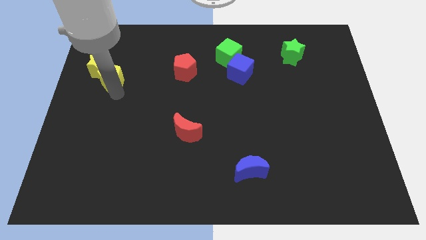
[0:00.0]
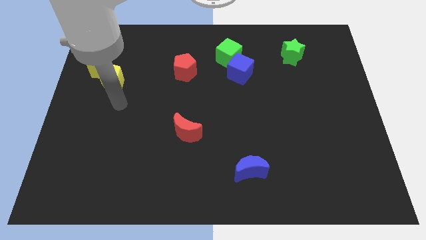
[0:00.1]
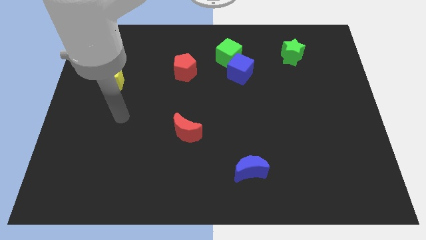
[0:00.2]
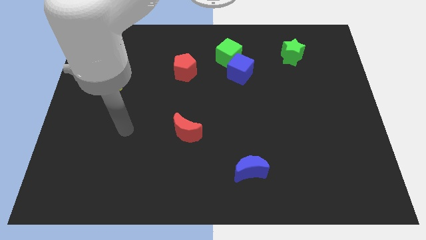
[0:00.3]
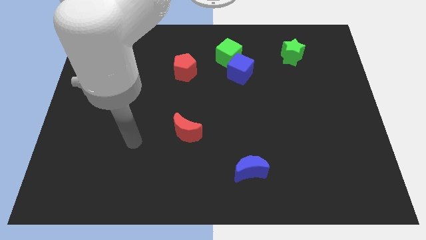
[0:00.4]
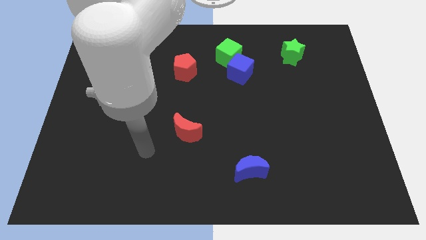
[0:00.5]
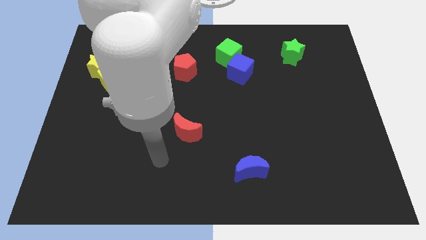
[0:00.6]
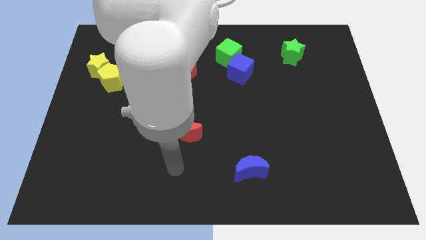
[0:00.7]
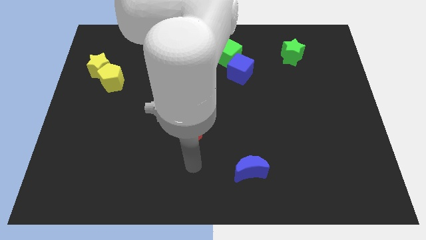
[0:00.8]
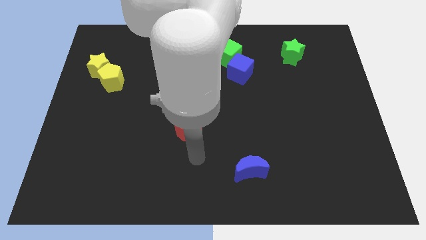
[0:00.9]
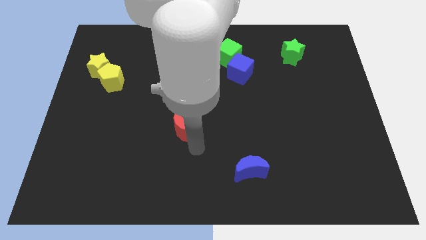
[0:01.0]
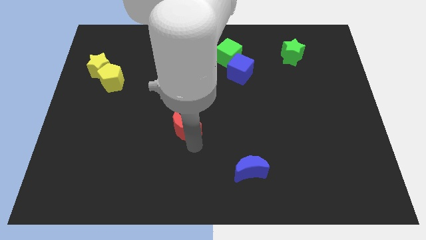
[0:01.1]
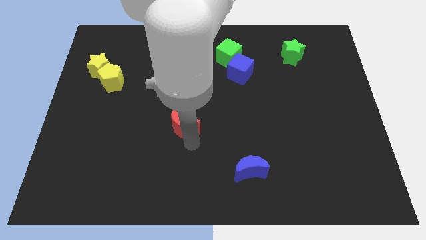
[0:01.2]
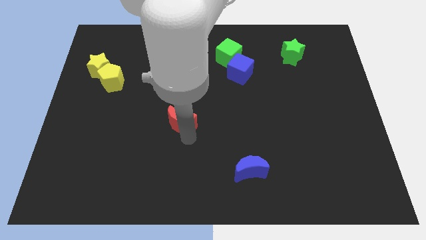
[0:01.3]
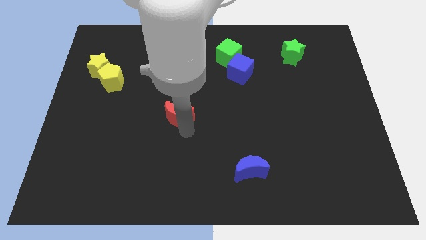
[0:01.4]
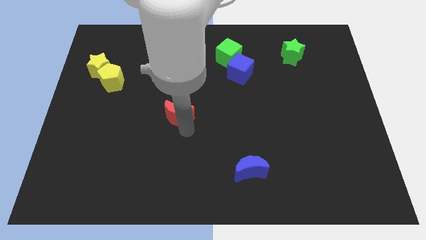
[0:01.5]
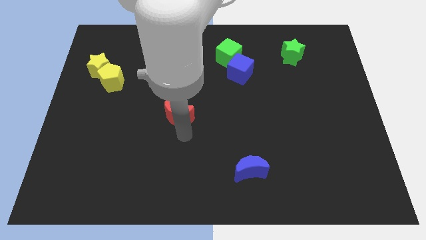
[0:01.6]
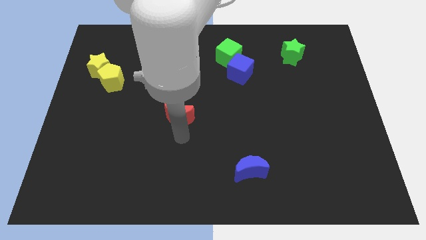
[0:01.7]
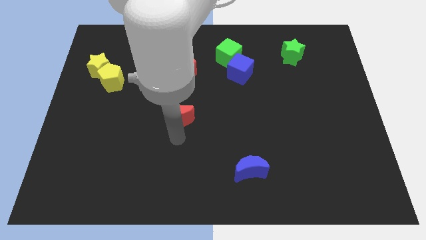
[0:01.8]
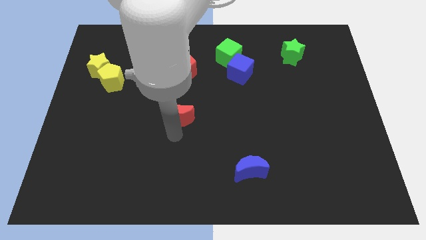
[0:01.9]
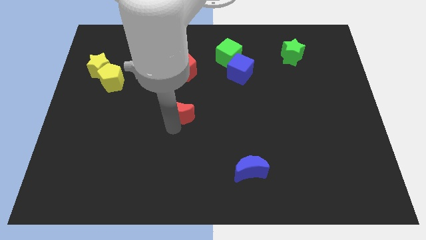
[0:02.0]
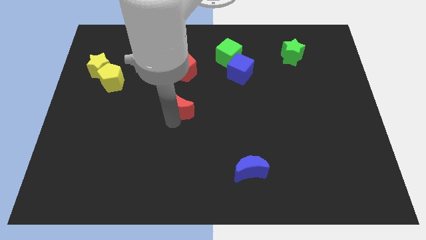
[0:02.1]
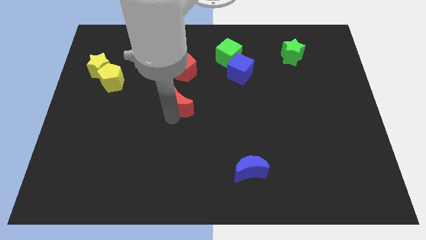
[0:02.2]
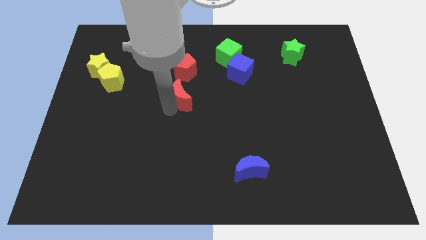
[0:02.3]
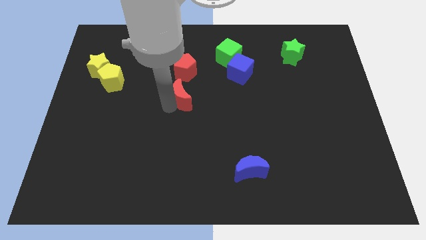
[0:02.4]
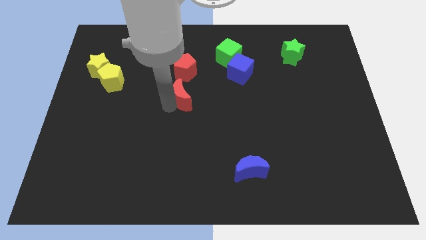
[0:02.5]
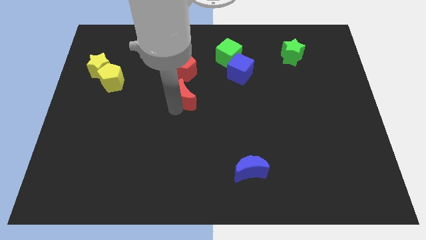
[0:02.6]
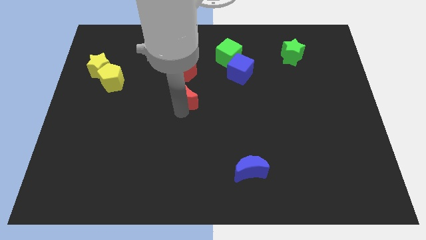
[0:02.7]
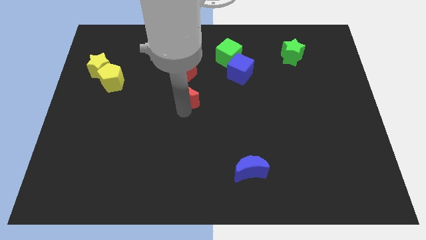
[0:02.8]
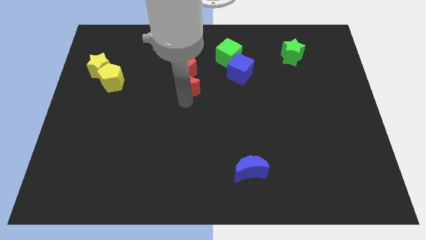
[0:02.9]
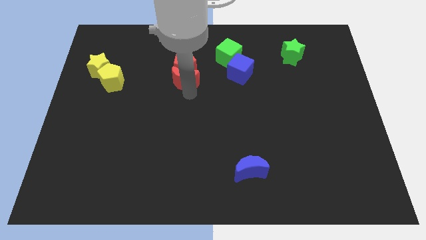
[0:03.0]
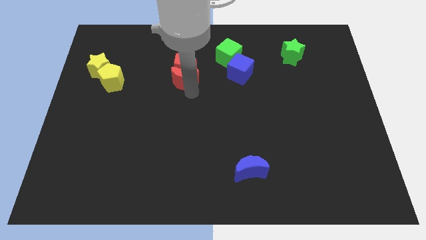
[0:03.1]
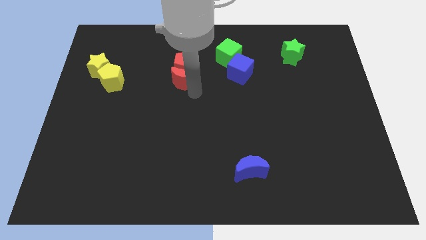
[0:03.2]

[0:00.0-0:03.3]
slide the red moon into the bottom side of the red pentagon

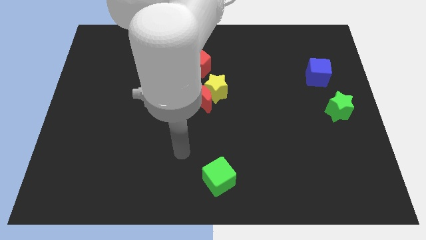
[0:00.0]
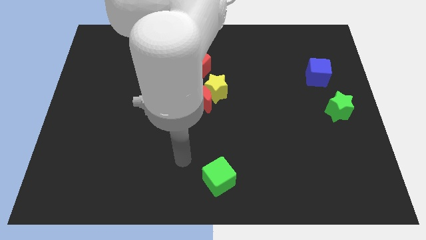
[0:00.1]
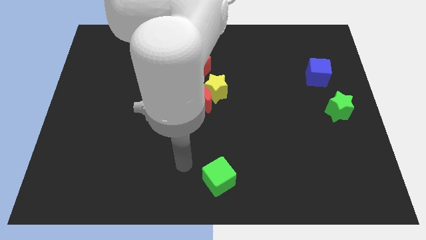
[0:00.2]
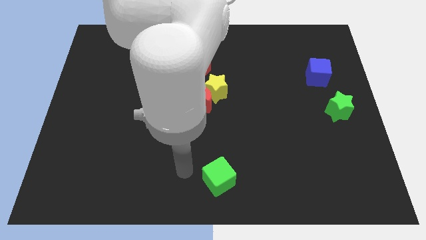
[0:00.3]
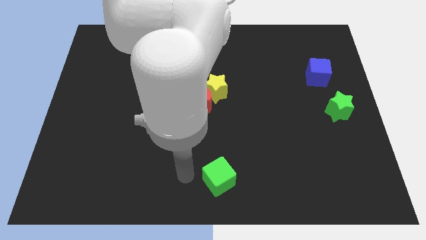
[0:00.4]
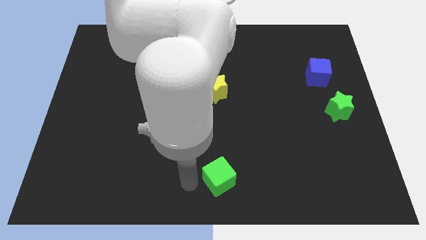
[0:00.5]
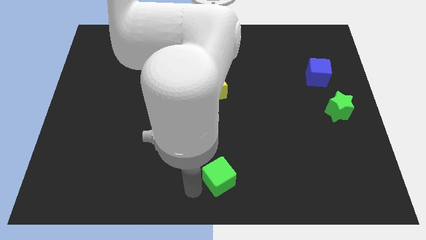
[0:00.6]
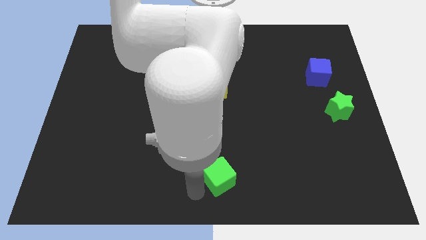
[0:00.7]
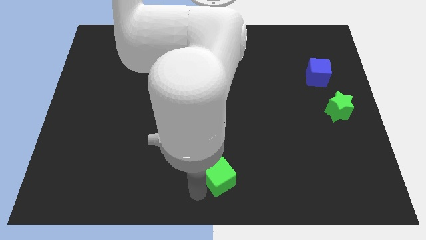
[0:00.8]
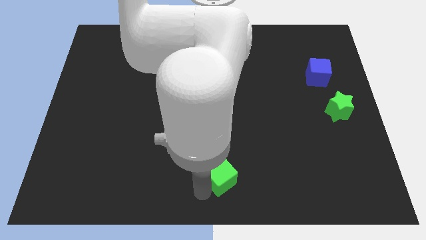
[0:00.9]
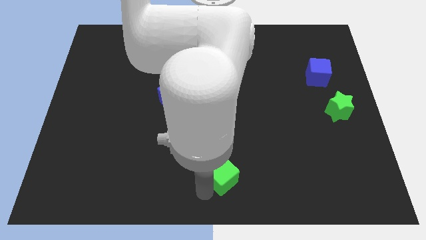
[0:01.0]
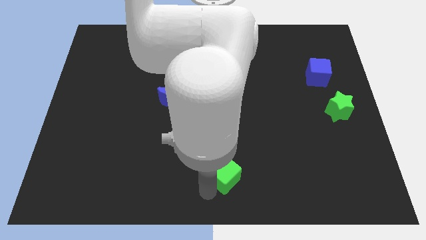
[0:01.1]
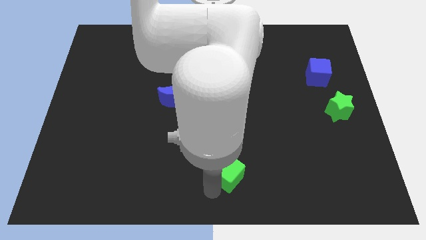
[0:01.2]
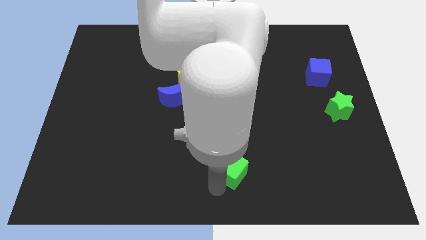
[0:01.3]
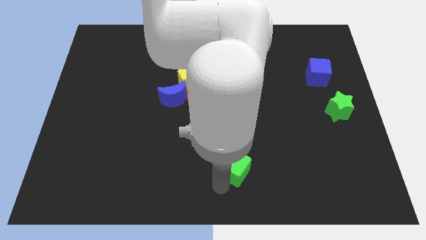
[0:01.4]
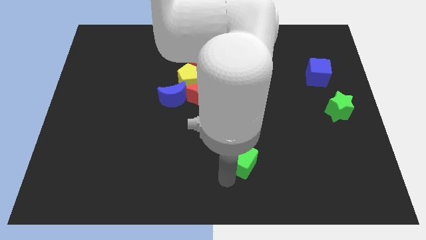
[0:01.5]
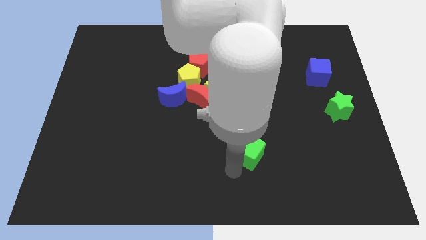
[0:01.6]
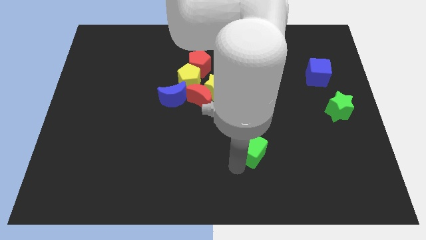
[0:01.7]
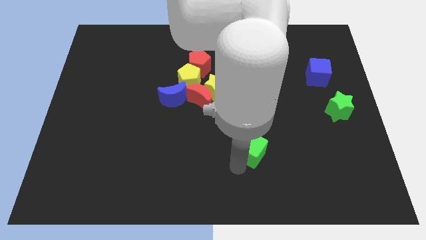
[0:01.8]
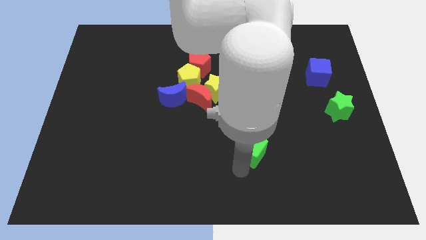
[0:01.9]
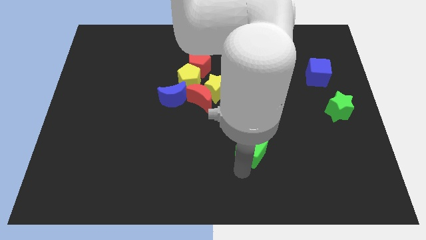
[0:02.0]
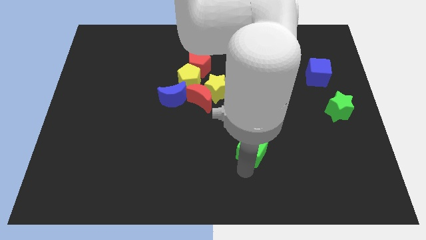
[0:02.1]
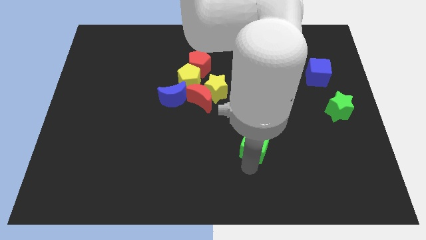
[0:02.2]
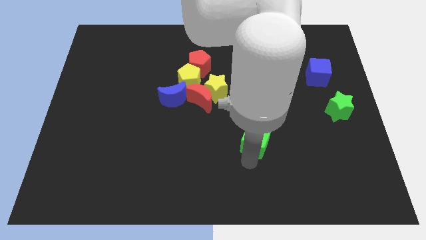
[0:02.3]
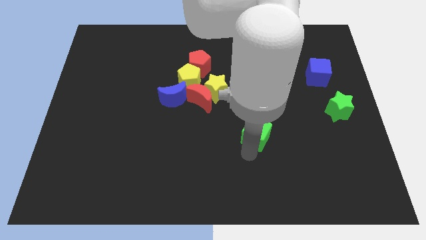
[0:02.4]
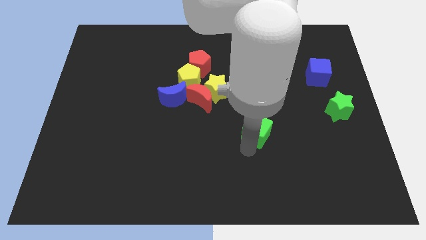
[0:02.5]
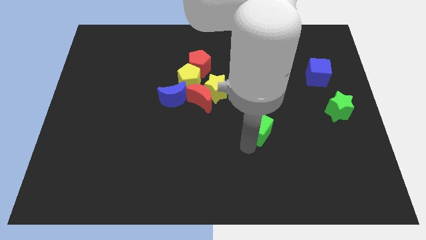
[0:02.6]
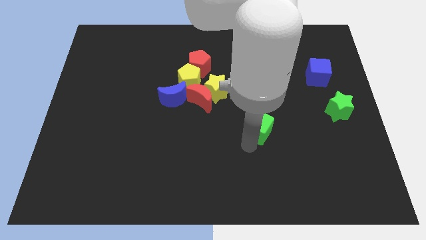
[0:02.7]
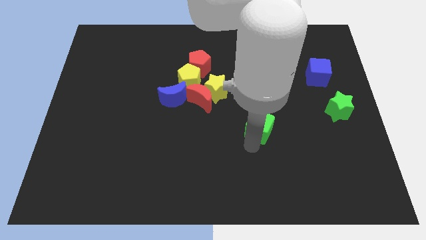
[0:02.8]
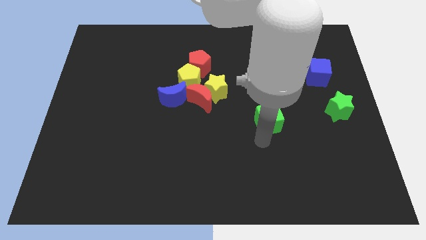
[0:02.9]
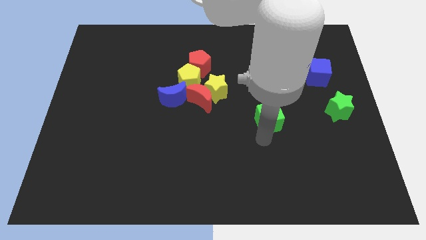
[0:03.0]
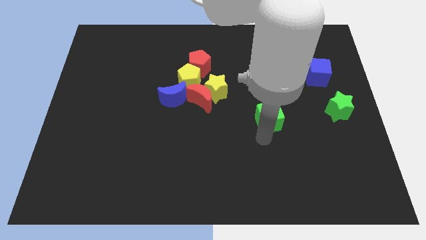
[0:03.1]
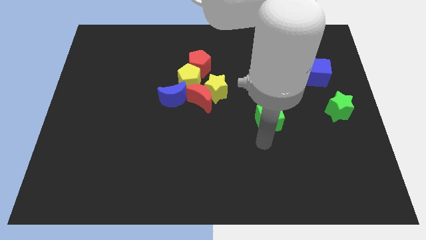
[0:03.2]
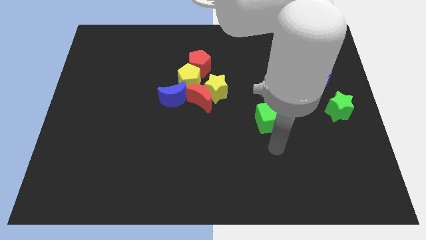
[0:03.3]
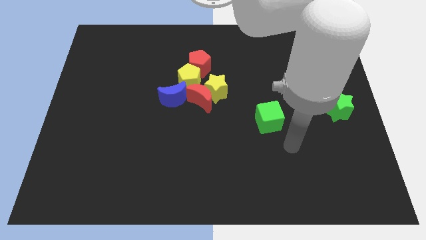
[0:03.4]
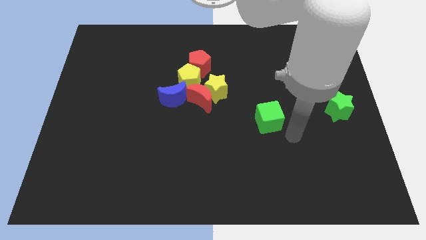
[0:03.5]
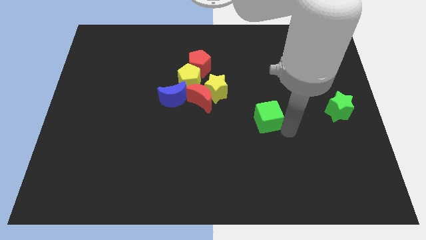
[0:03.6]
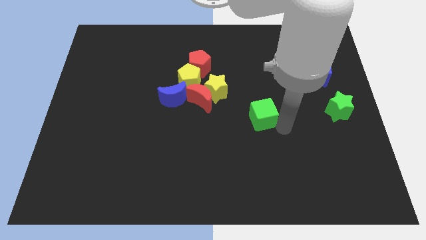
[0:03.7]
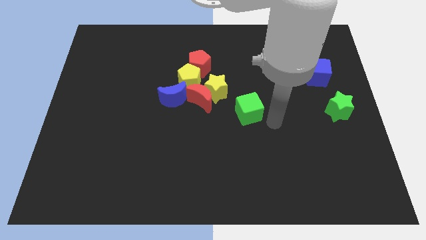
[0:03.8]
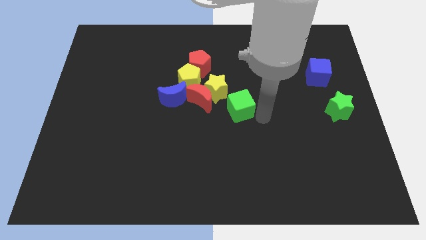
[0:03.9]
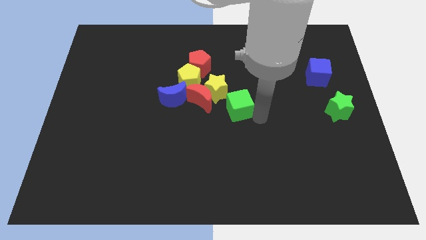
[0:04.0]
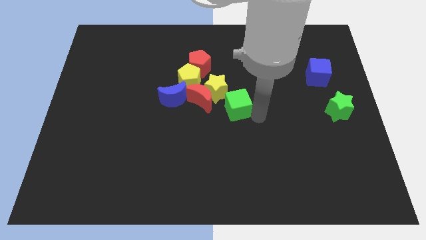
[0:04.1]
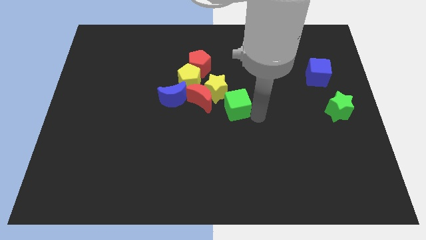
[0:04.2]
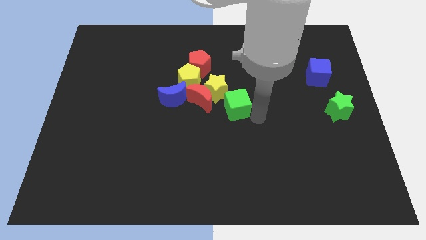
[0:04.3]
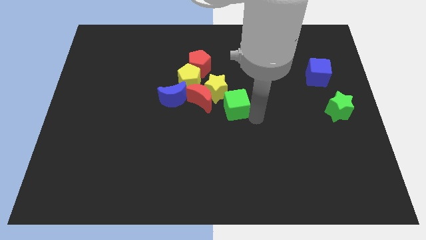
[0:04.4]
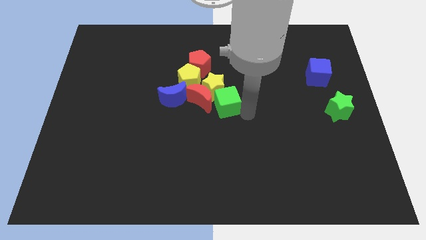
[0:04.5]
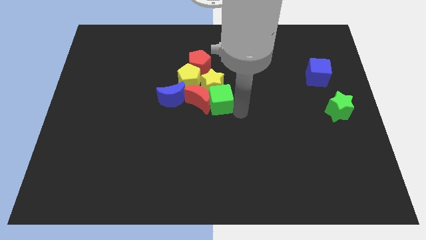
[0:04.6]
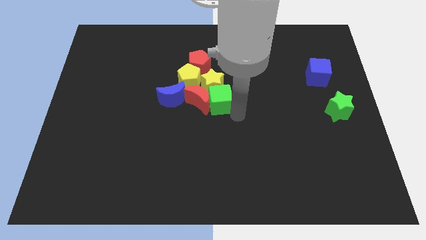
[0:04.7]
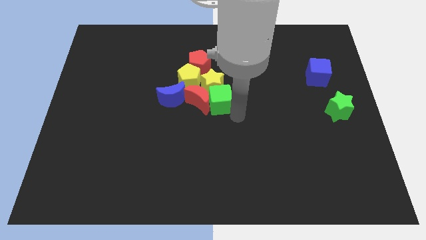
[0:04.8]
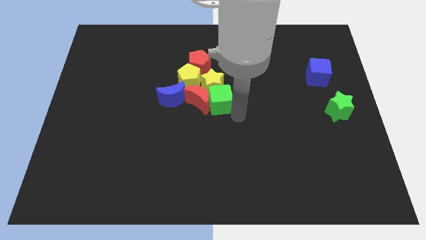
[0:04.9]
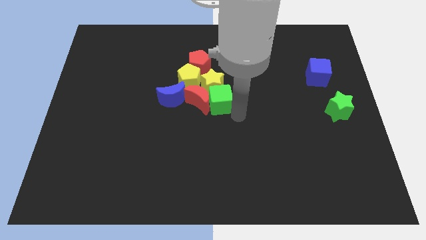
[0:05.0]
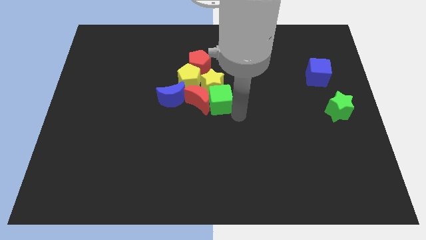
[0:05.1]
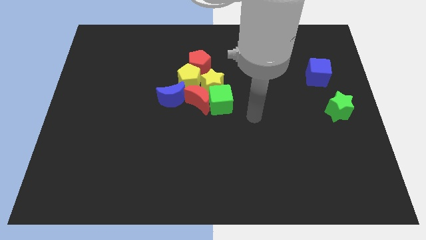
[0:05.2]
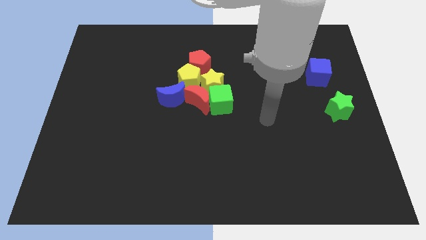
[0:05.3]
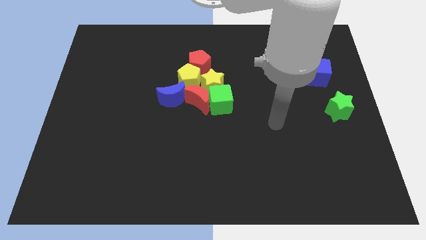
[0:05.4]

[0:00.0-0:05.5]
move the green cube below the yellow star

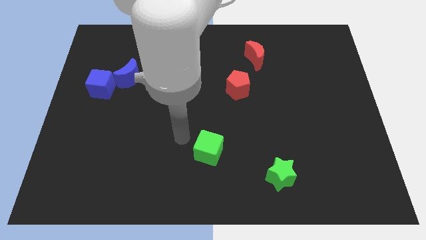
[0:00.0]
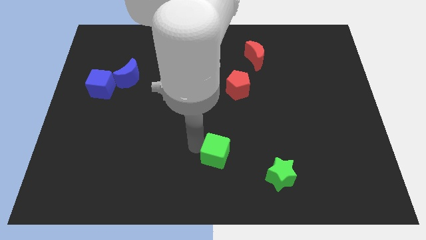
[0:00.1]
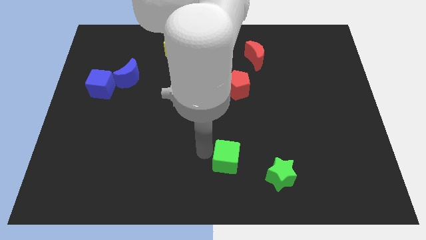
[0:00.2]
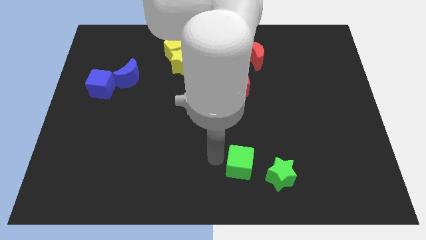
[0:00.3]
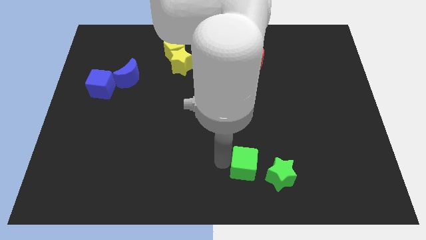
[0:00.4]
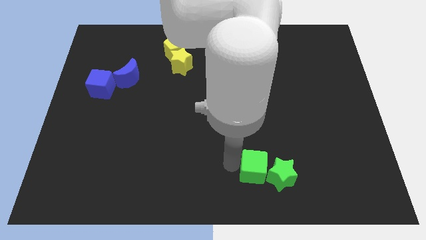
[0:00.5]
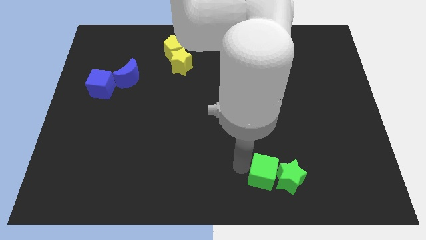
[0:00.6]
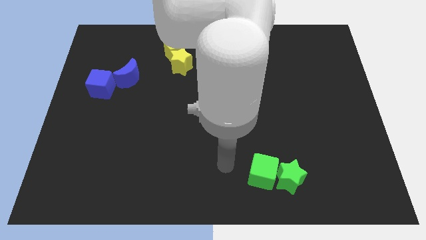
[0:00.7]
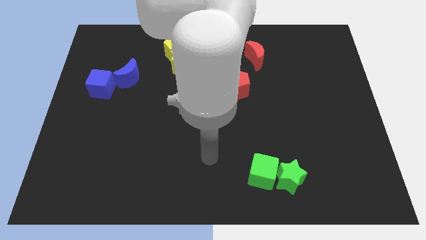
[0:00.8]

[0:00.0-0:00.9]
push the green cube into the green star
